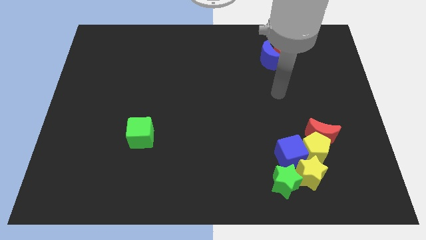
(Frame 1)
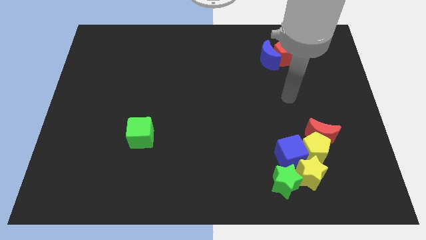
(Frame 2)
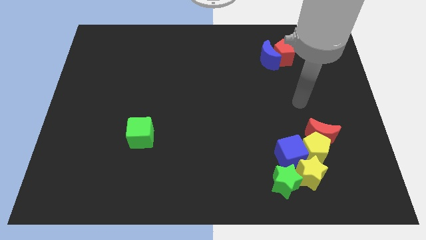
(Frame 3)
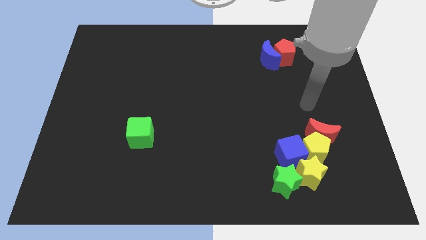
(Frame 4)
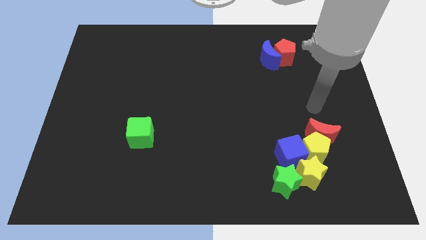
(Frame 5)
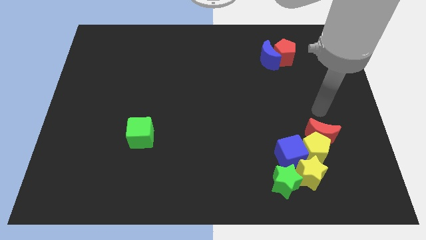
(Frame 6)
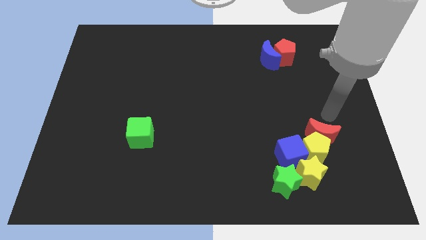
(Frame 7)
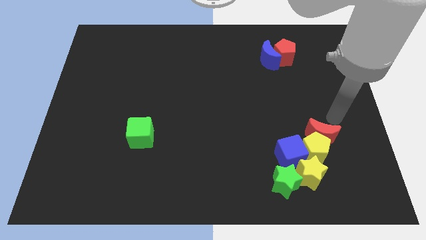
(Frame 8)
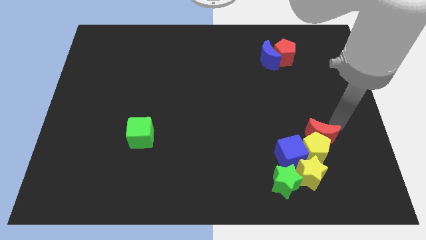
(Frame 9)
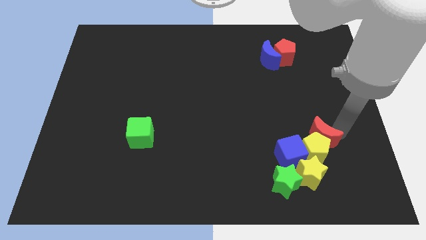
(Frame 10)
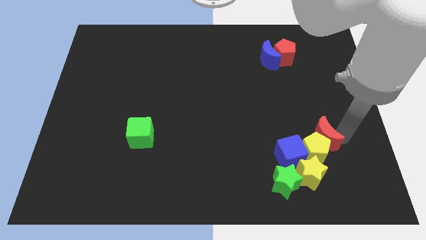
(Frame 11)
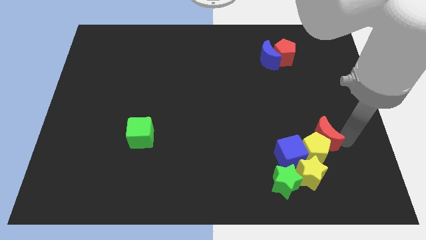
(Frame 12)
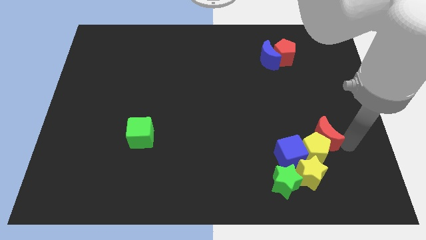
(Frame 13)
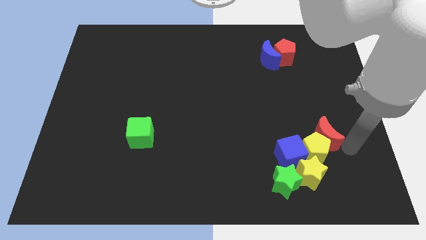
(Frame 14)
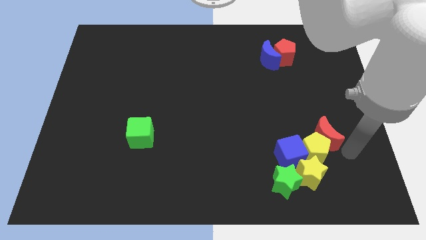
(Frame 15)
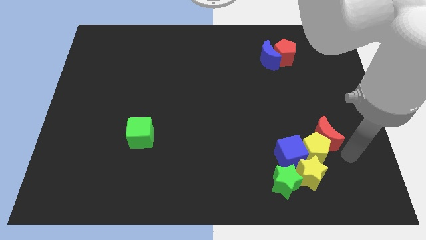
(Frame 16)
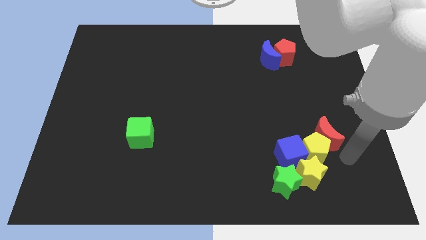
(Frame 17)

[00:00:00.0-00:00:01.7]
move your arm towards the bottom of right corner of the red moon

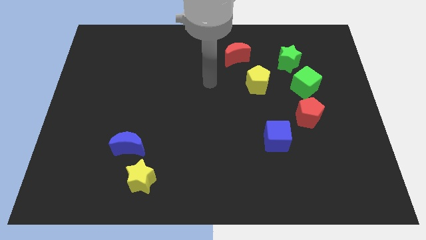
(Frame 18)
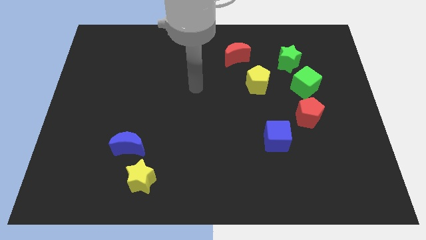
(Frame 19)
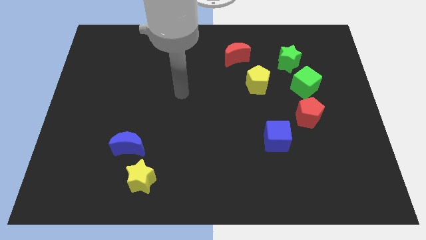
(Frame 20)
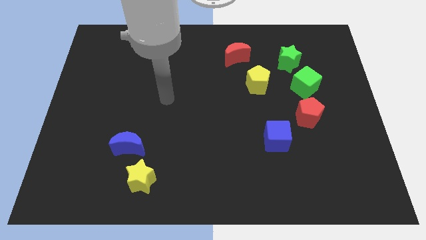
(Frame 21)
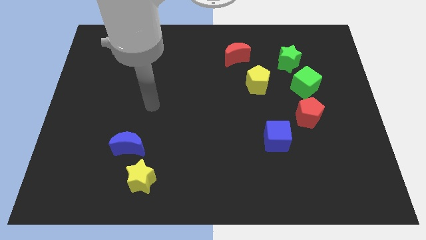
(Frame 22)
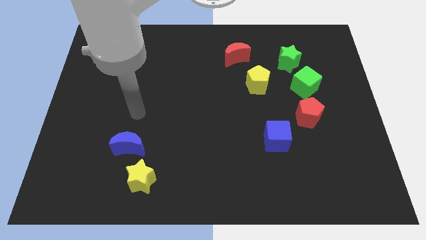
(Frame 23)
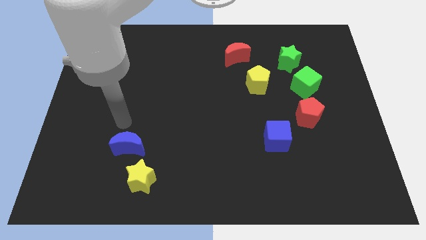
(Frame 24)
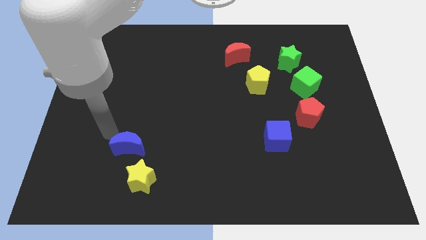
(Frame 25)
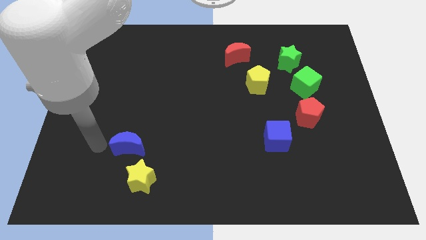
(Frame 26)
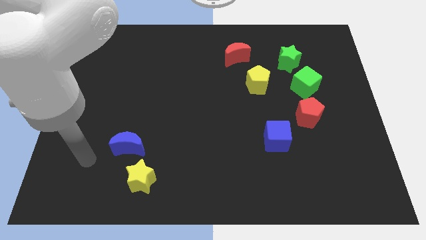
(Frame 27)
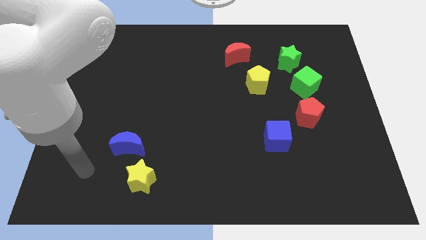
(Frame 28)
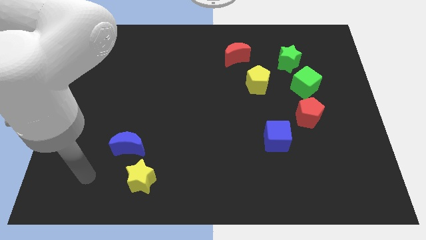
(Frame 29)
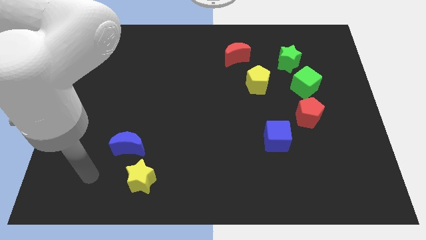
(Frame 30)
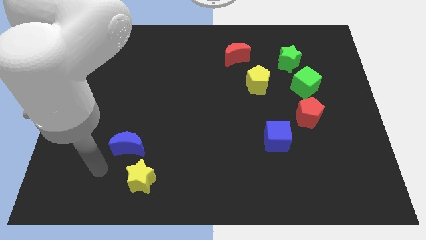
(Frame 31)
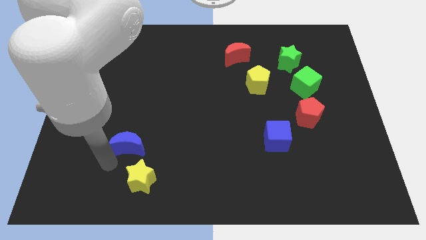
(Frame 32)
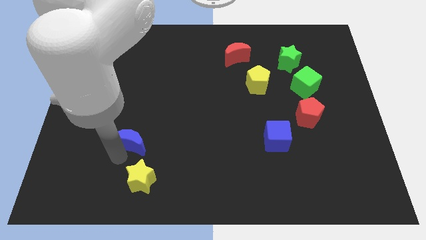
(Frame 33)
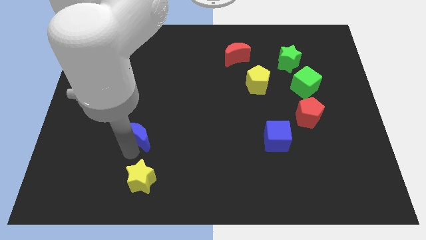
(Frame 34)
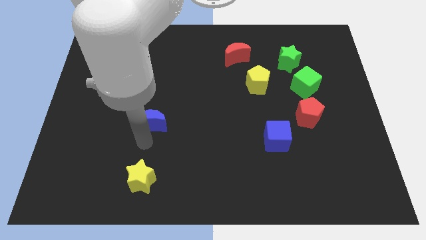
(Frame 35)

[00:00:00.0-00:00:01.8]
push the blue moon vertically above the yellow star

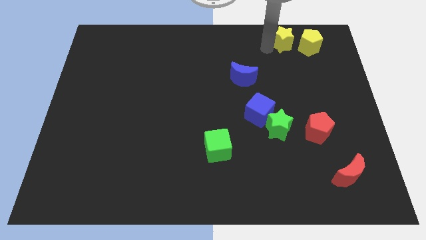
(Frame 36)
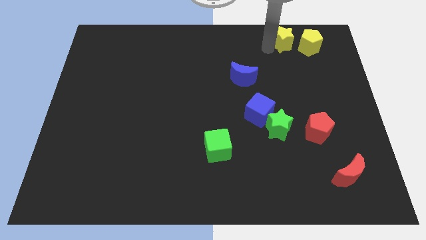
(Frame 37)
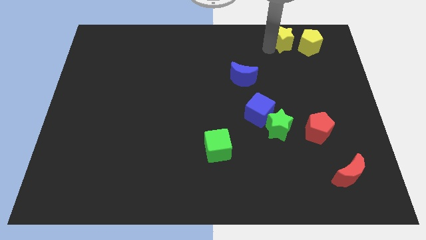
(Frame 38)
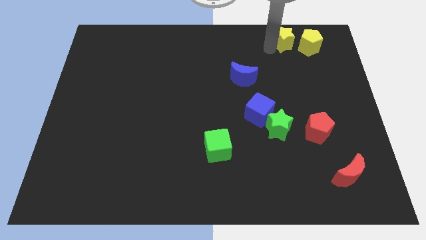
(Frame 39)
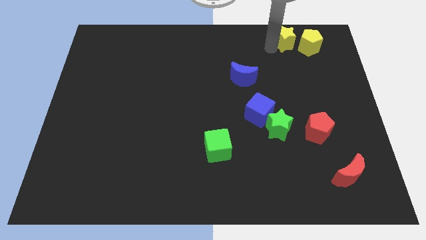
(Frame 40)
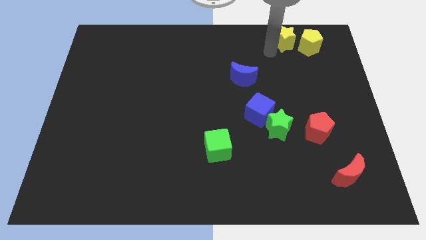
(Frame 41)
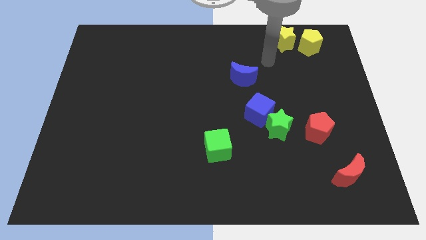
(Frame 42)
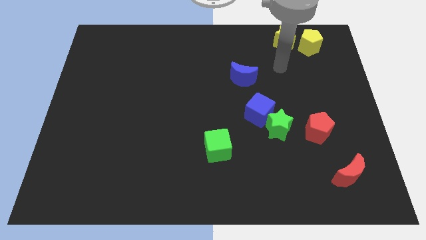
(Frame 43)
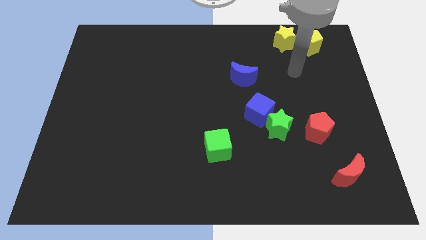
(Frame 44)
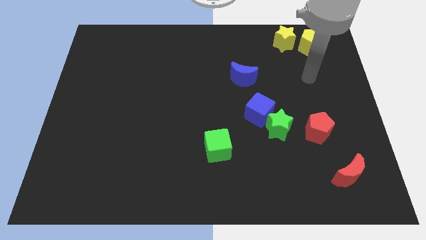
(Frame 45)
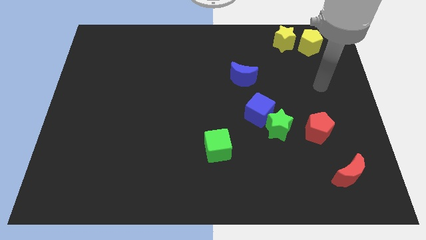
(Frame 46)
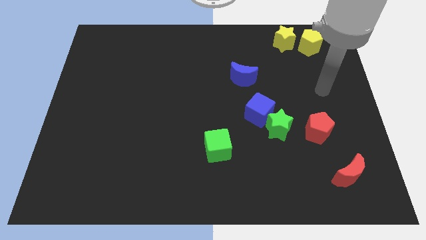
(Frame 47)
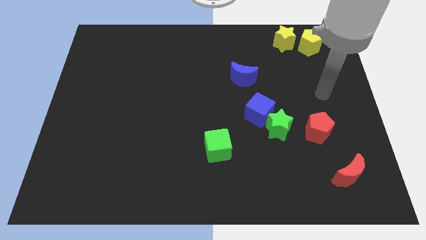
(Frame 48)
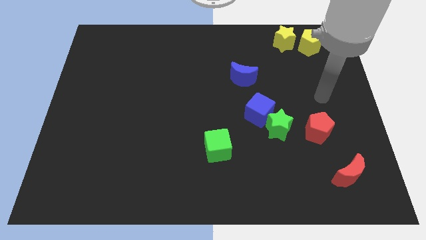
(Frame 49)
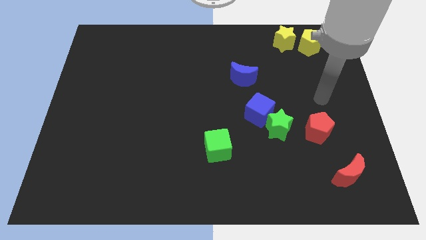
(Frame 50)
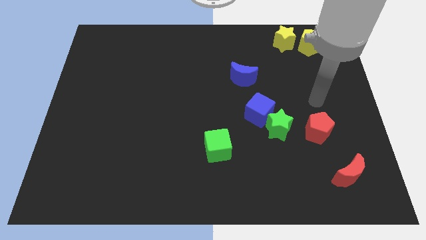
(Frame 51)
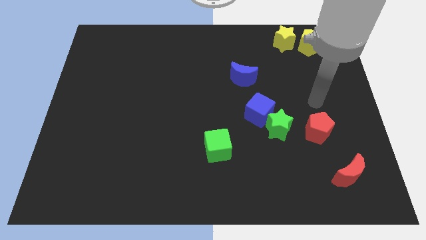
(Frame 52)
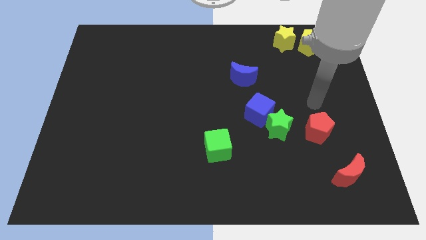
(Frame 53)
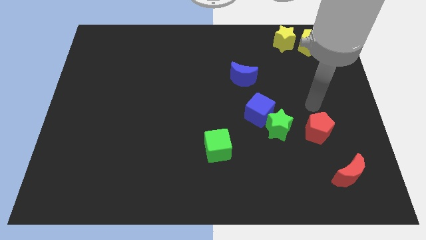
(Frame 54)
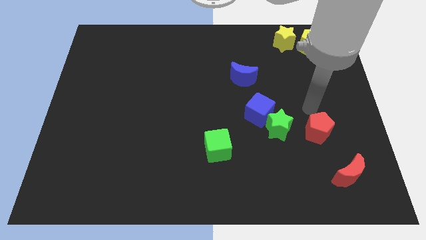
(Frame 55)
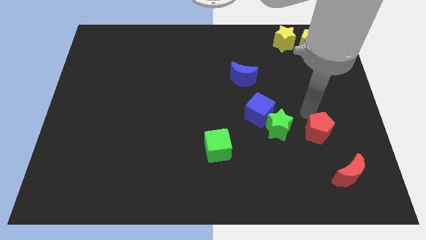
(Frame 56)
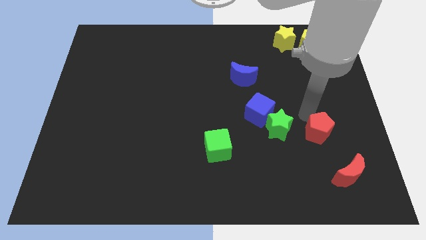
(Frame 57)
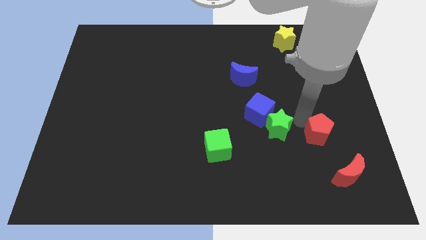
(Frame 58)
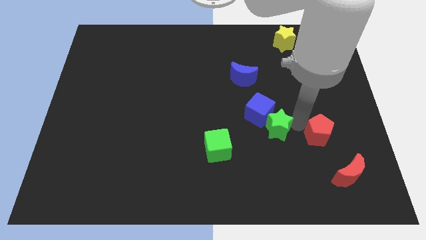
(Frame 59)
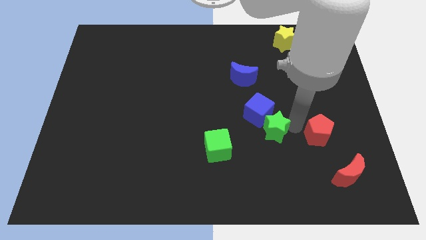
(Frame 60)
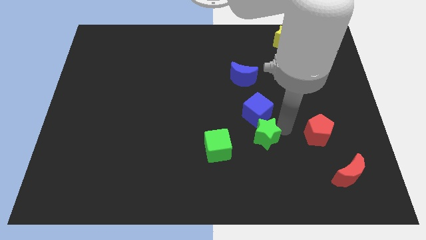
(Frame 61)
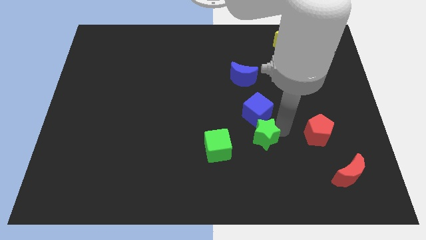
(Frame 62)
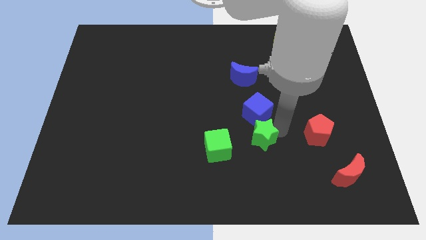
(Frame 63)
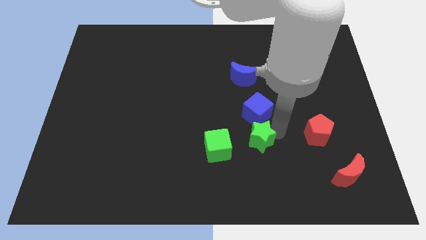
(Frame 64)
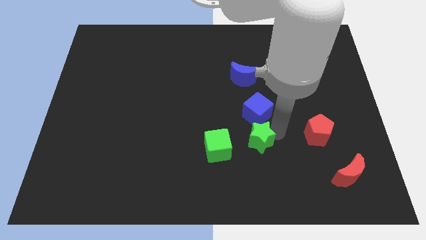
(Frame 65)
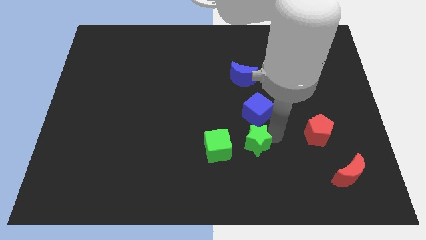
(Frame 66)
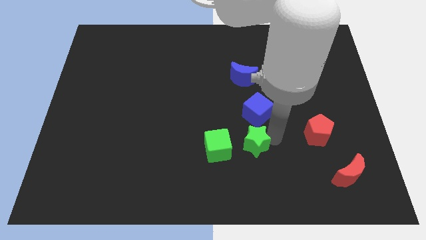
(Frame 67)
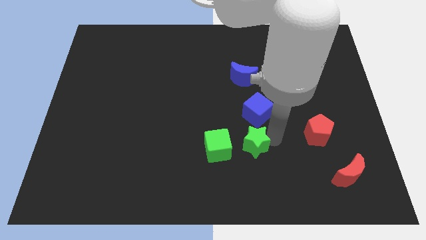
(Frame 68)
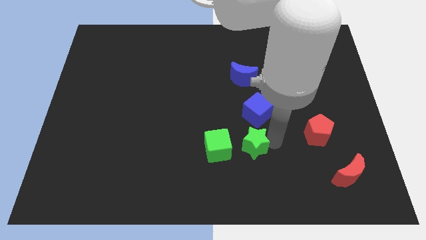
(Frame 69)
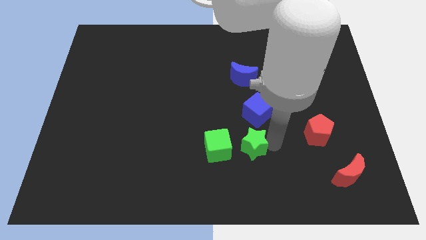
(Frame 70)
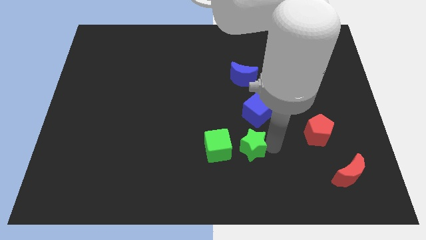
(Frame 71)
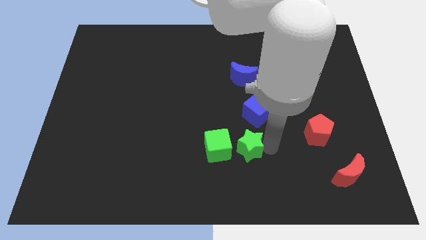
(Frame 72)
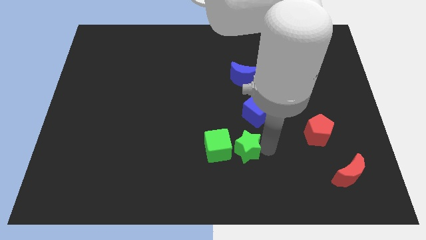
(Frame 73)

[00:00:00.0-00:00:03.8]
separate the green star and blue cube

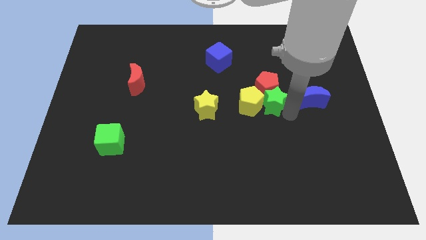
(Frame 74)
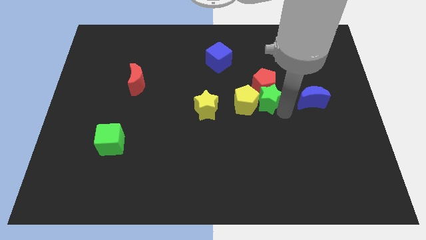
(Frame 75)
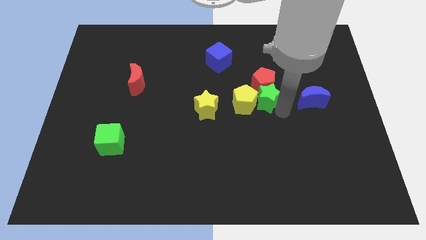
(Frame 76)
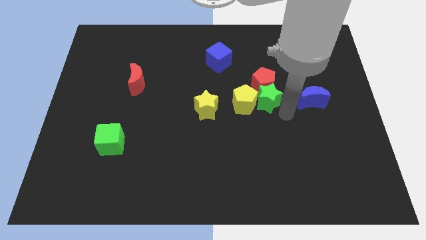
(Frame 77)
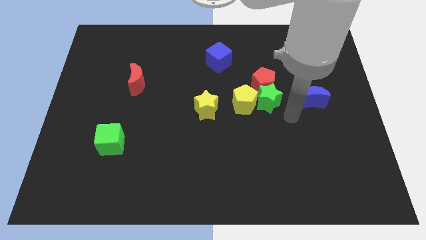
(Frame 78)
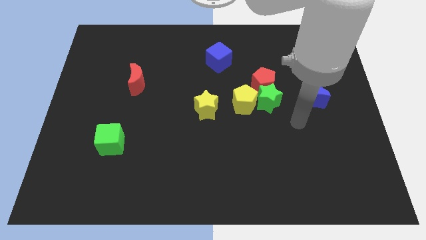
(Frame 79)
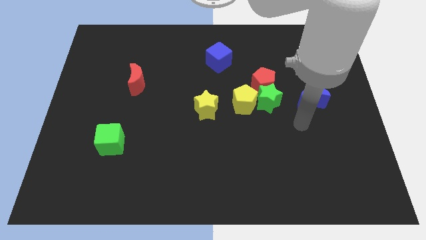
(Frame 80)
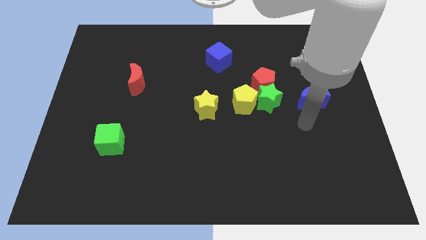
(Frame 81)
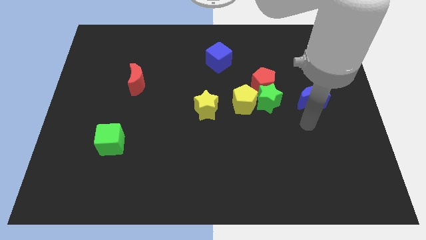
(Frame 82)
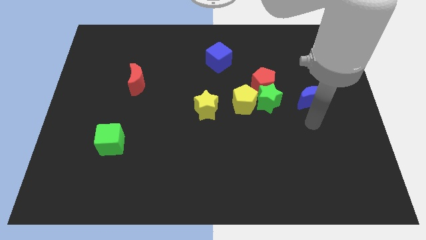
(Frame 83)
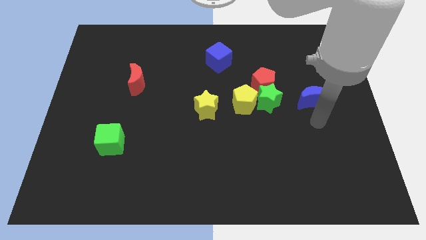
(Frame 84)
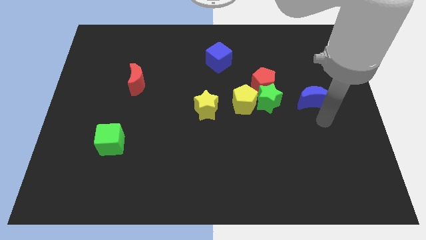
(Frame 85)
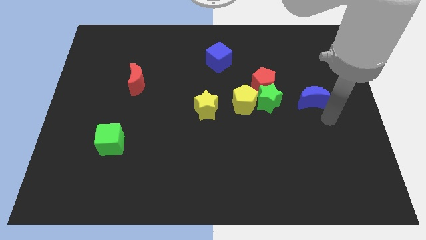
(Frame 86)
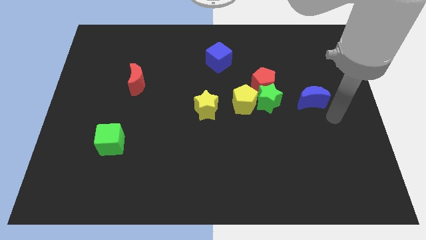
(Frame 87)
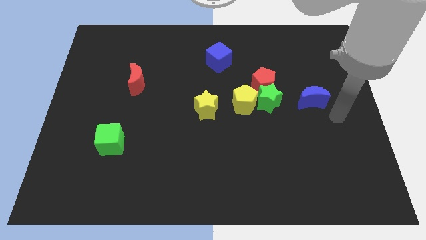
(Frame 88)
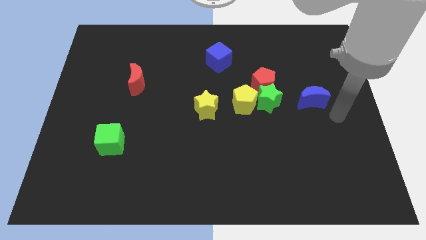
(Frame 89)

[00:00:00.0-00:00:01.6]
mov ethe green star slightly left
